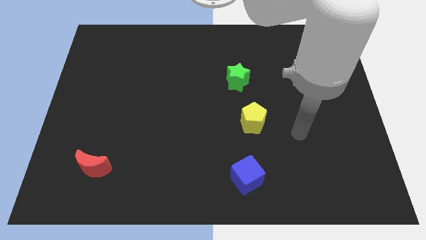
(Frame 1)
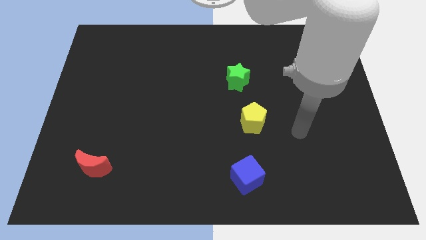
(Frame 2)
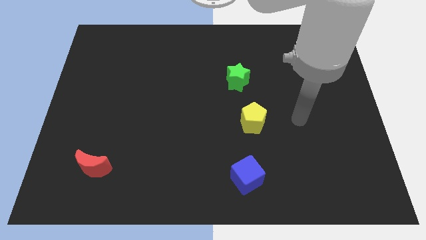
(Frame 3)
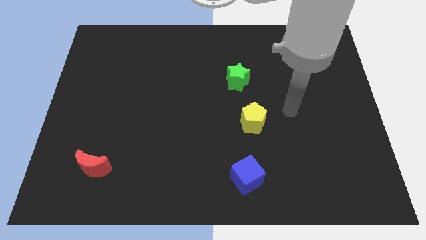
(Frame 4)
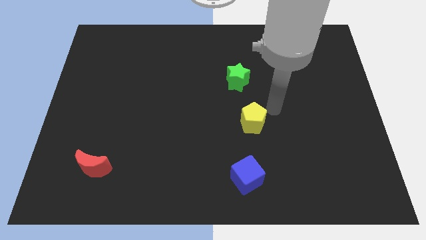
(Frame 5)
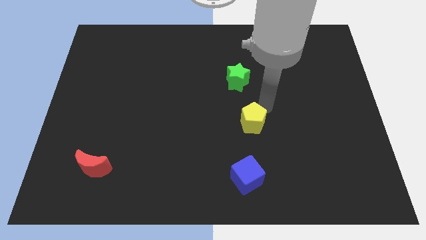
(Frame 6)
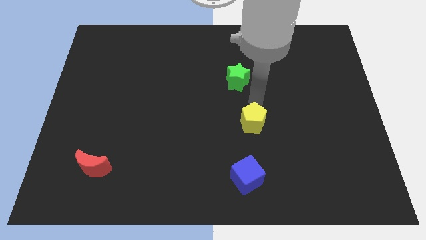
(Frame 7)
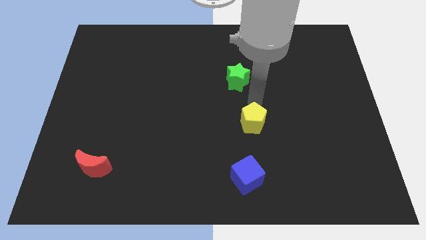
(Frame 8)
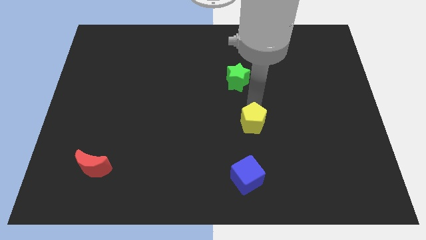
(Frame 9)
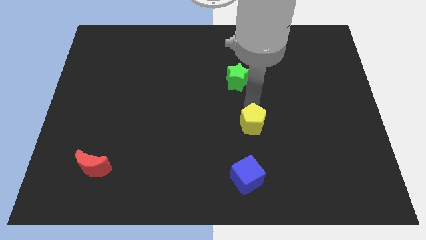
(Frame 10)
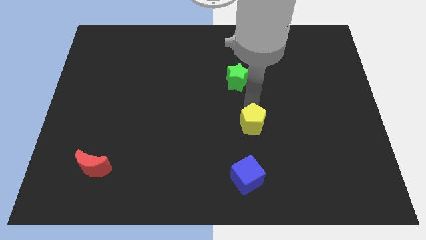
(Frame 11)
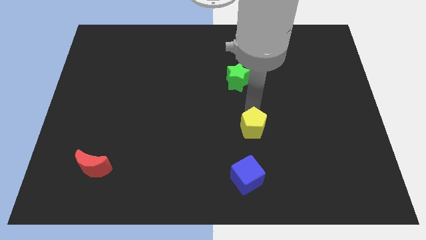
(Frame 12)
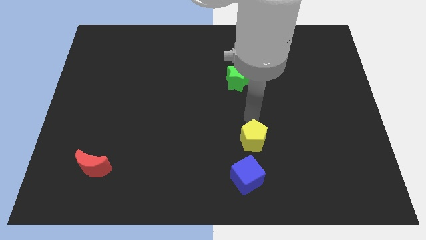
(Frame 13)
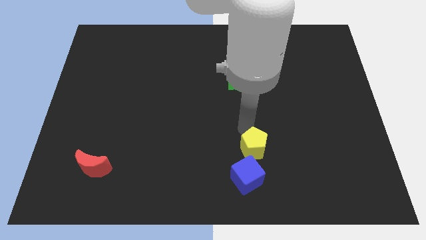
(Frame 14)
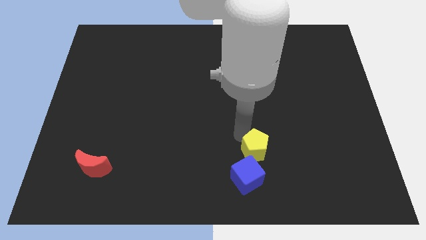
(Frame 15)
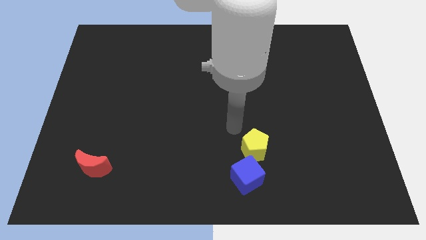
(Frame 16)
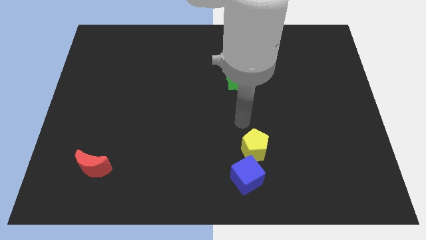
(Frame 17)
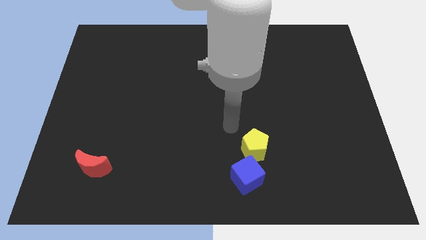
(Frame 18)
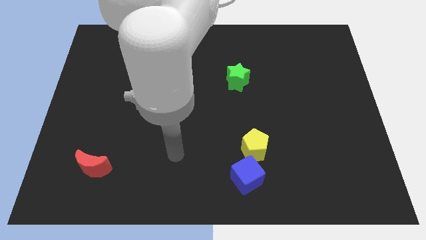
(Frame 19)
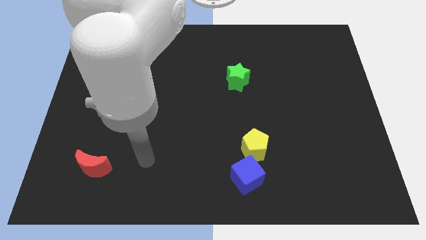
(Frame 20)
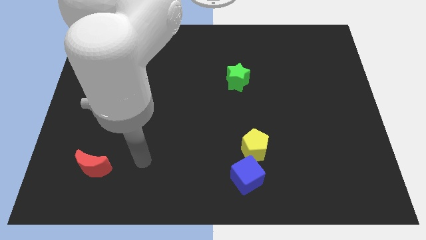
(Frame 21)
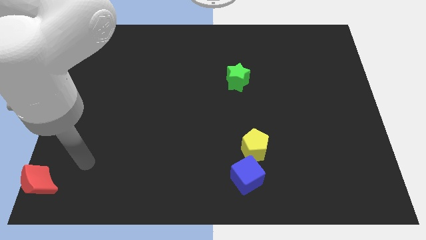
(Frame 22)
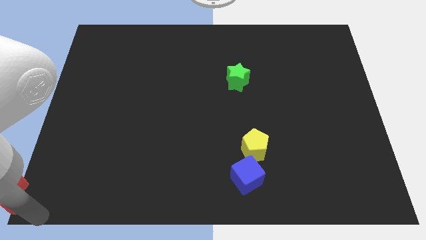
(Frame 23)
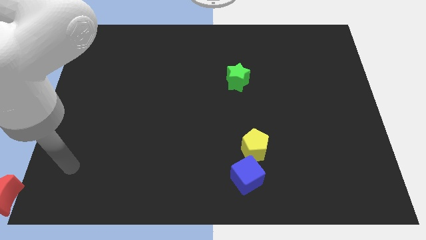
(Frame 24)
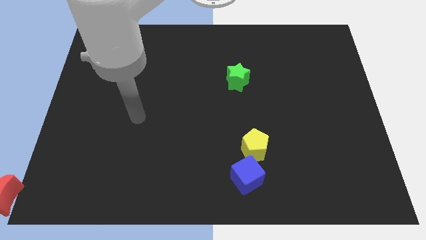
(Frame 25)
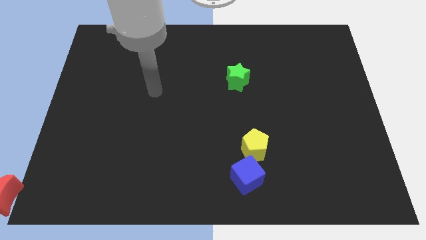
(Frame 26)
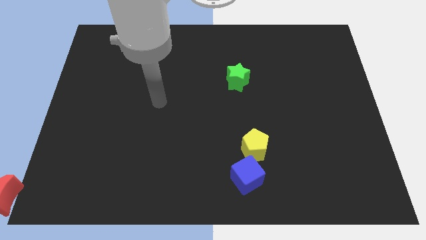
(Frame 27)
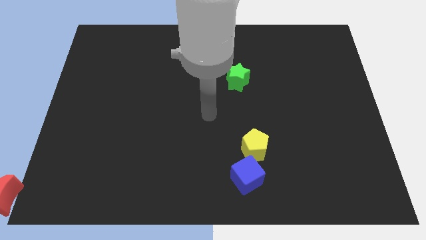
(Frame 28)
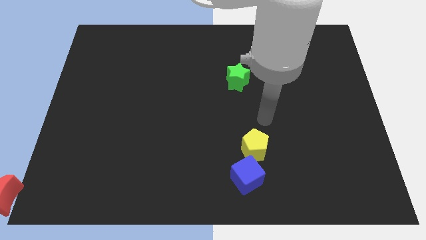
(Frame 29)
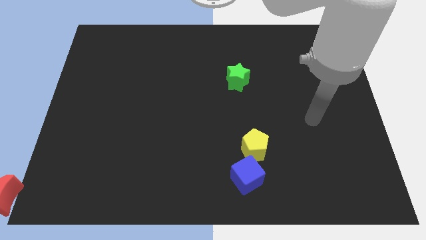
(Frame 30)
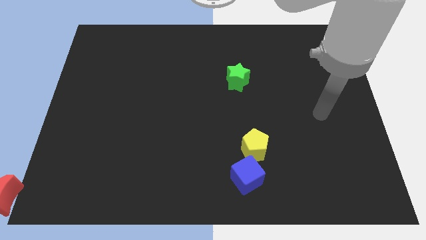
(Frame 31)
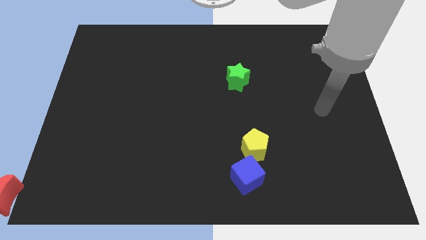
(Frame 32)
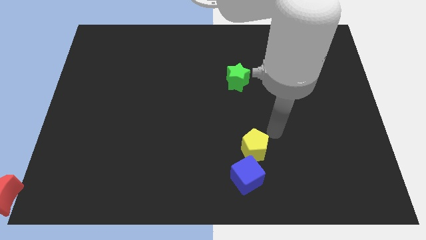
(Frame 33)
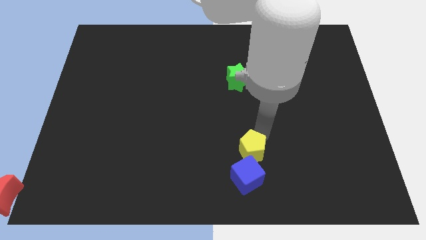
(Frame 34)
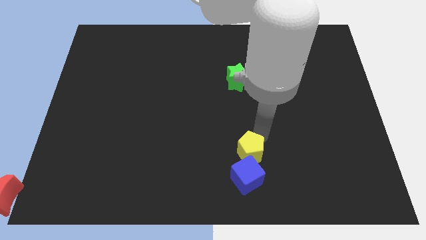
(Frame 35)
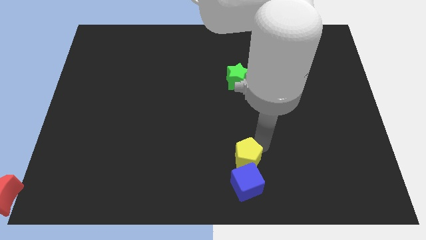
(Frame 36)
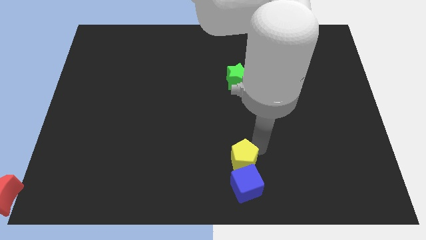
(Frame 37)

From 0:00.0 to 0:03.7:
slide the yellow pentagon towards the blue cube

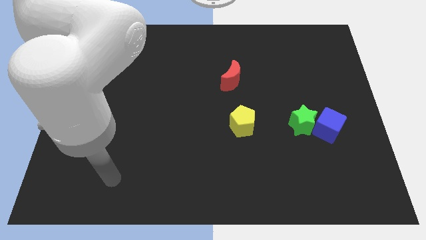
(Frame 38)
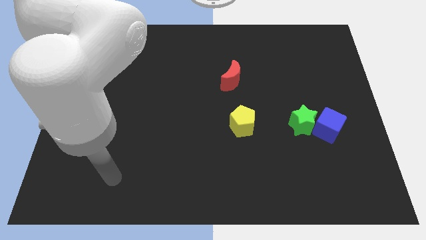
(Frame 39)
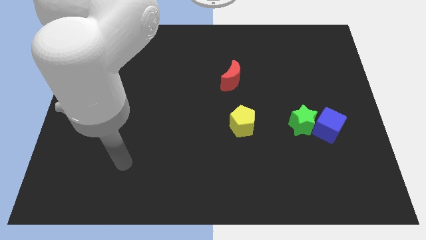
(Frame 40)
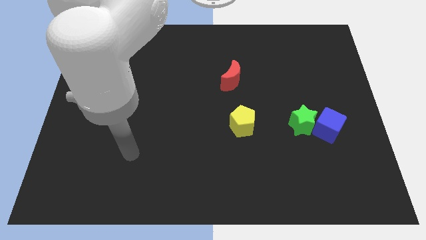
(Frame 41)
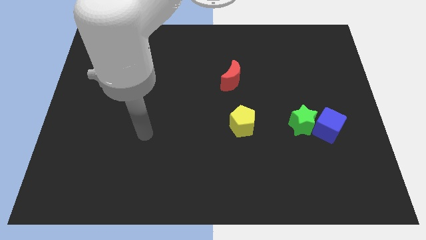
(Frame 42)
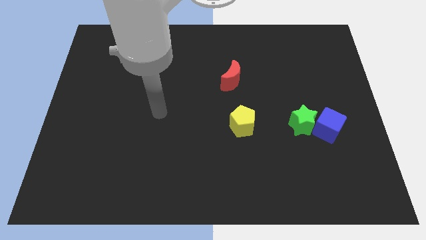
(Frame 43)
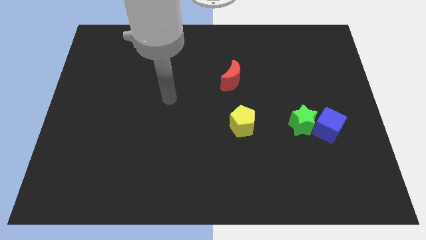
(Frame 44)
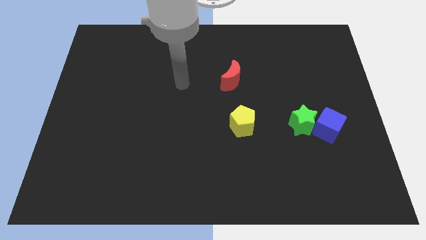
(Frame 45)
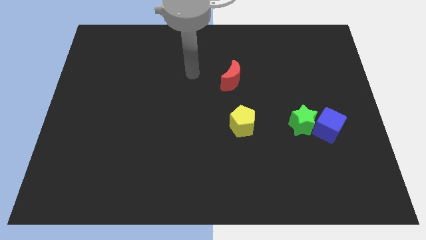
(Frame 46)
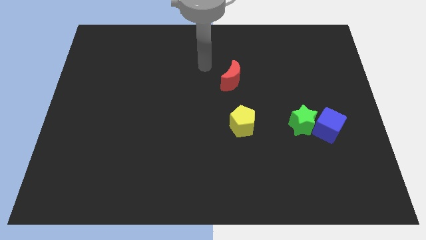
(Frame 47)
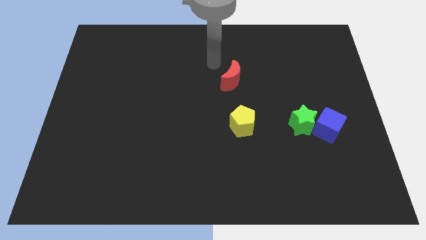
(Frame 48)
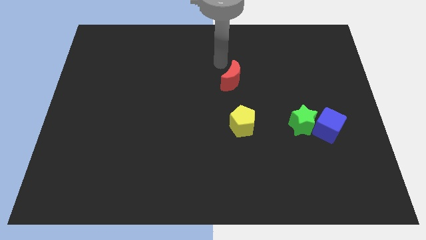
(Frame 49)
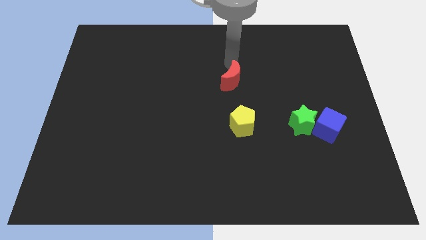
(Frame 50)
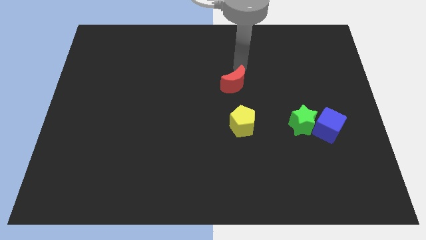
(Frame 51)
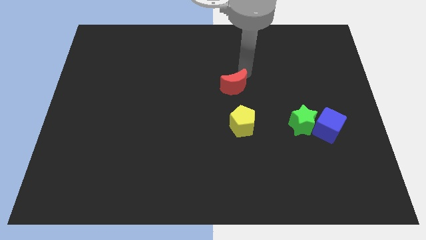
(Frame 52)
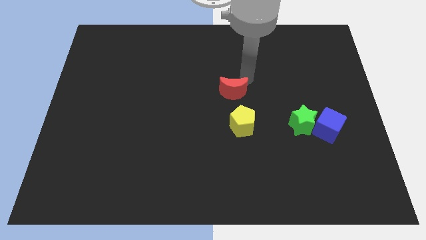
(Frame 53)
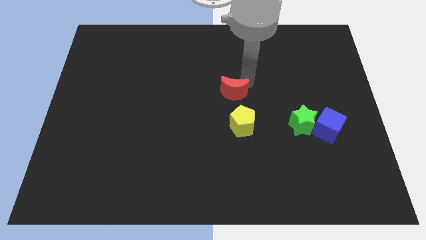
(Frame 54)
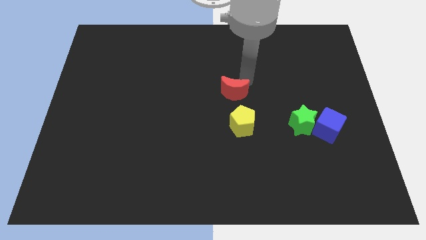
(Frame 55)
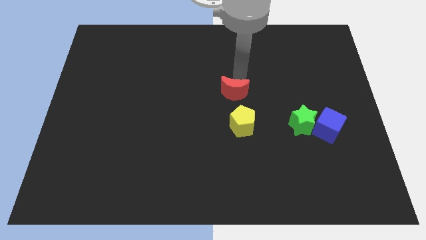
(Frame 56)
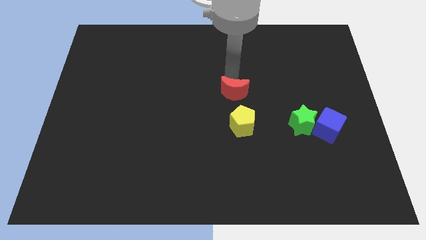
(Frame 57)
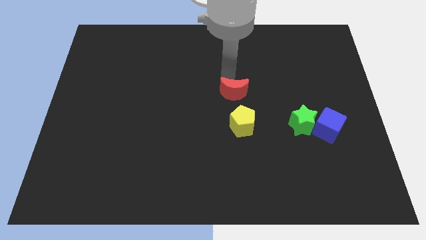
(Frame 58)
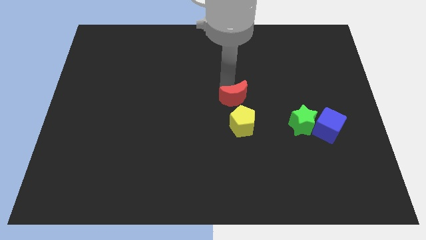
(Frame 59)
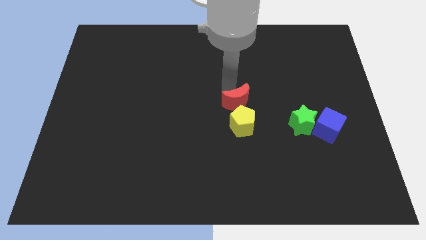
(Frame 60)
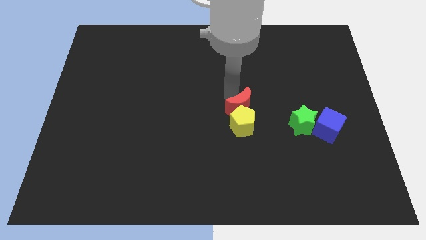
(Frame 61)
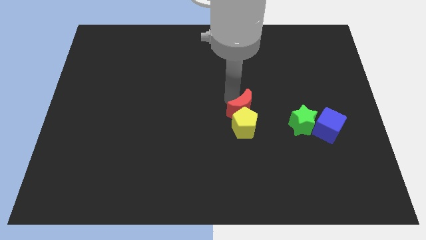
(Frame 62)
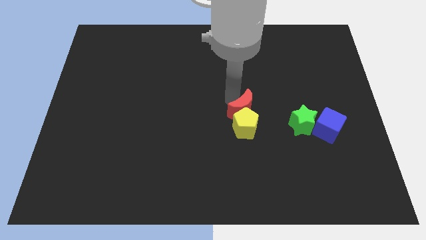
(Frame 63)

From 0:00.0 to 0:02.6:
slide the red moon next to the yellow block

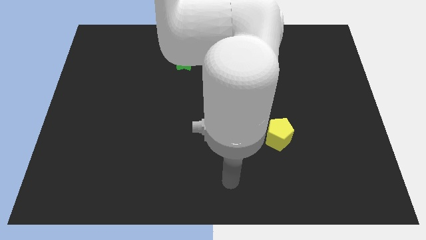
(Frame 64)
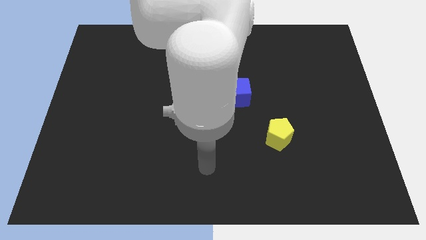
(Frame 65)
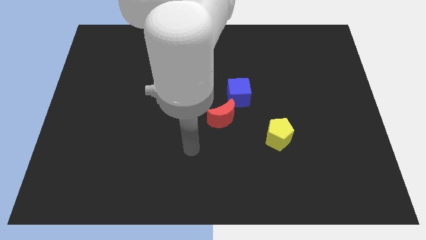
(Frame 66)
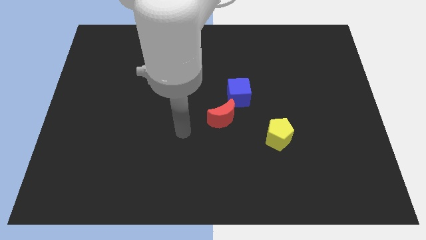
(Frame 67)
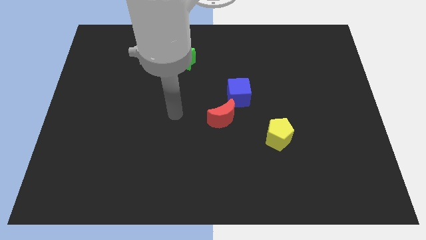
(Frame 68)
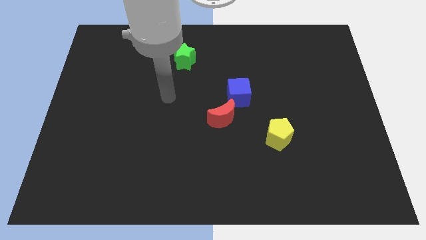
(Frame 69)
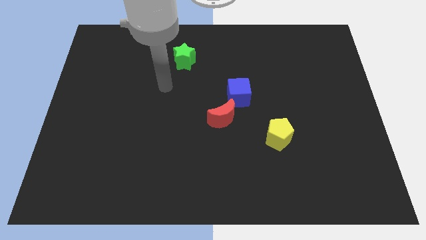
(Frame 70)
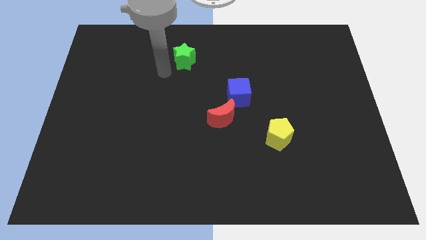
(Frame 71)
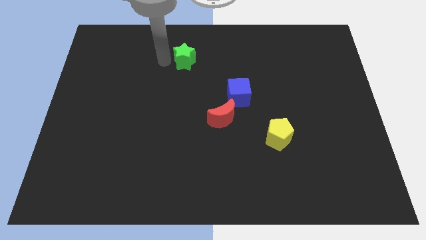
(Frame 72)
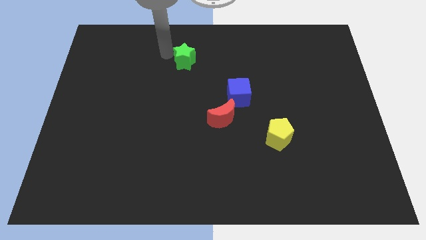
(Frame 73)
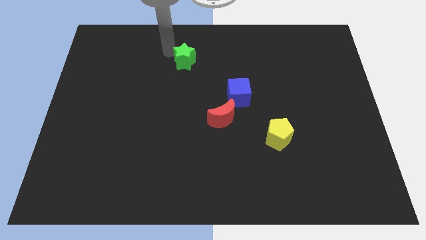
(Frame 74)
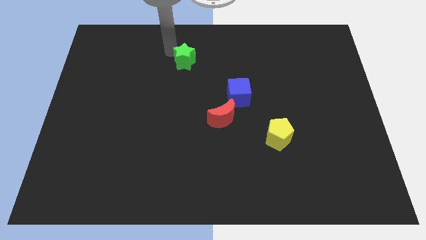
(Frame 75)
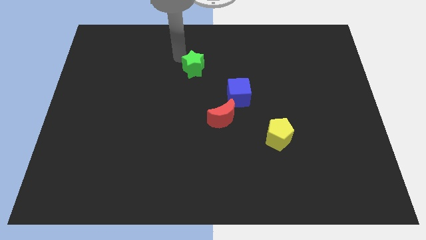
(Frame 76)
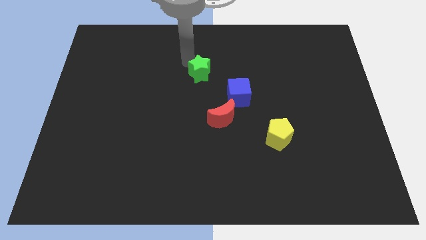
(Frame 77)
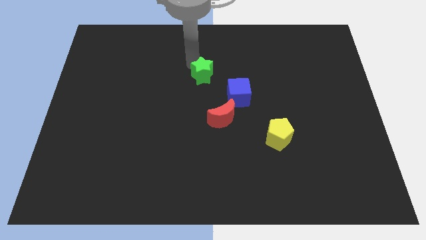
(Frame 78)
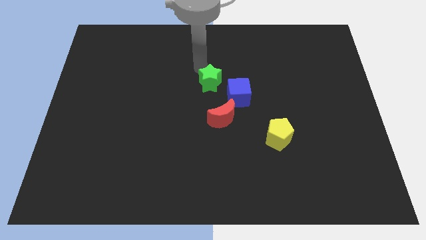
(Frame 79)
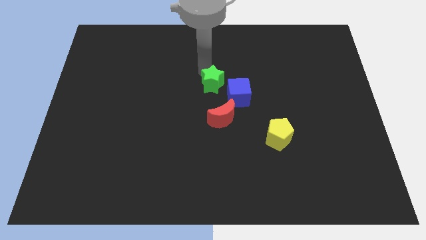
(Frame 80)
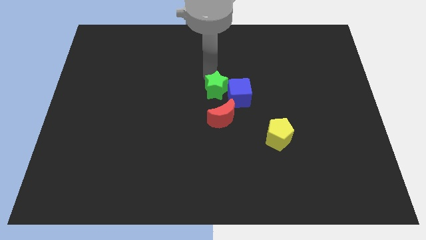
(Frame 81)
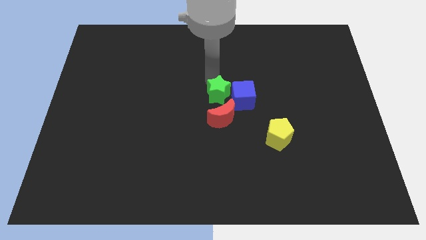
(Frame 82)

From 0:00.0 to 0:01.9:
move the green block to the cube

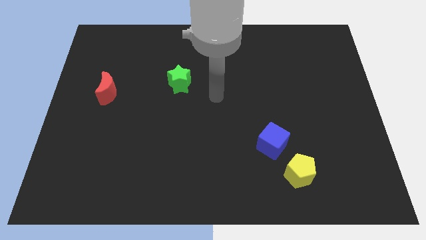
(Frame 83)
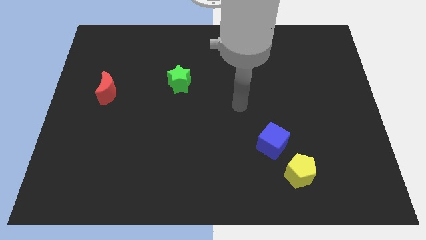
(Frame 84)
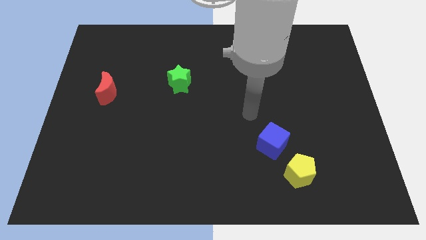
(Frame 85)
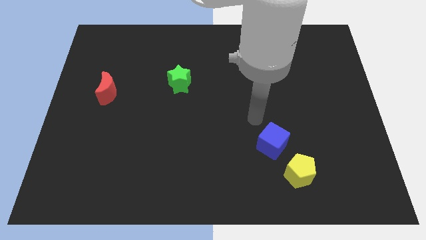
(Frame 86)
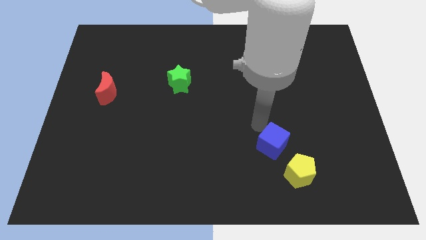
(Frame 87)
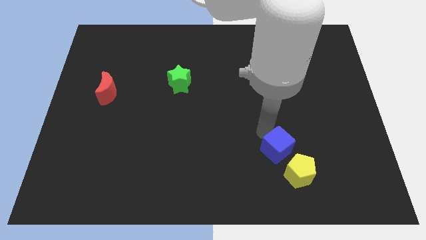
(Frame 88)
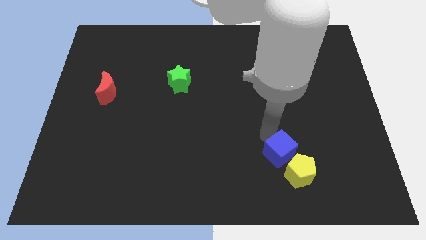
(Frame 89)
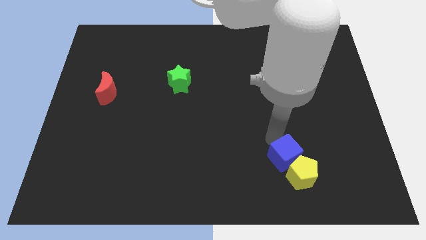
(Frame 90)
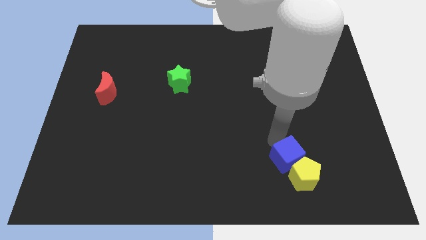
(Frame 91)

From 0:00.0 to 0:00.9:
push the blue cube next to the yellow pentagon
